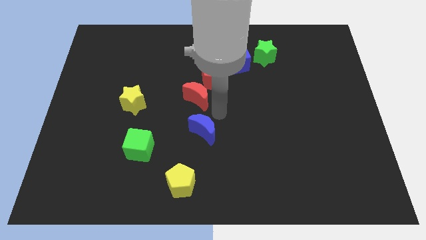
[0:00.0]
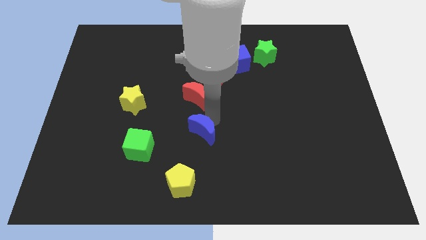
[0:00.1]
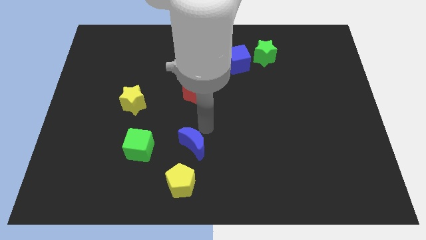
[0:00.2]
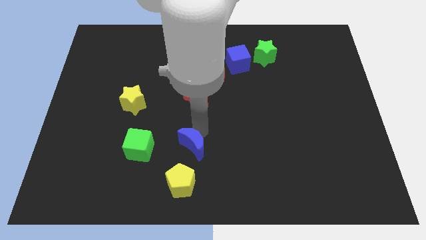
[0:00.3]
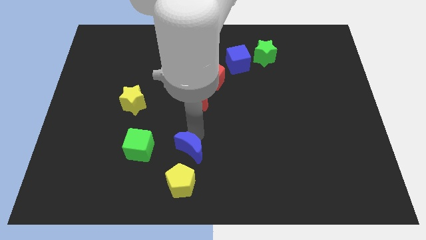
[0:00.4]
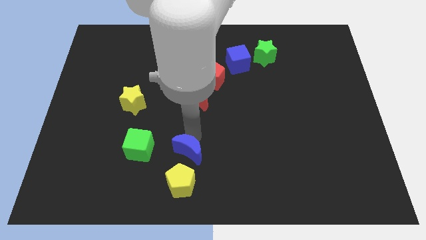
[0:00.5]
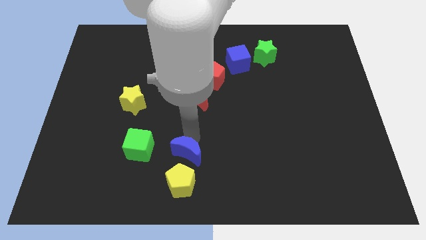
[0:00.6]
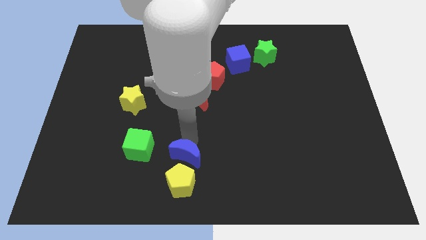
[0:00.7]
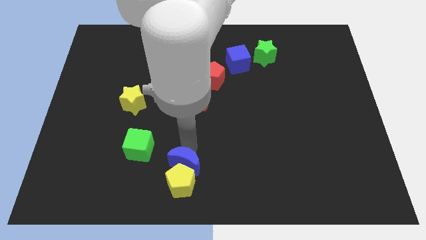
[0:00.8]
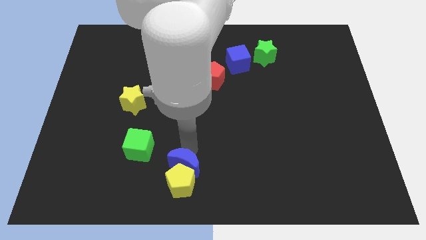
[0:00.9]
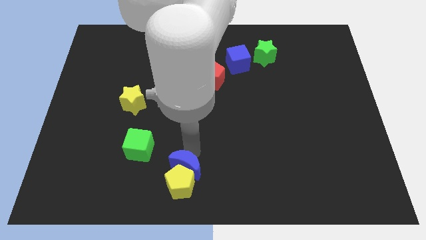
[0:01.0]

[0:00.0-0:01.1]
push the blue crescent into the yellow pentagon

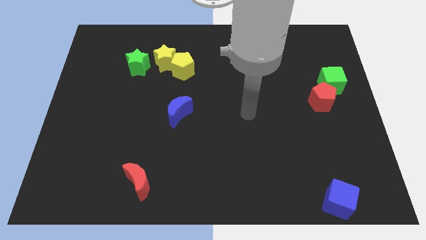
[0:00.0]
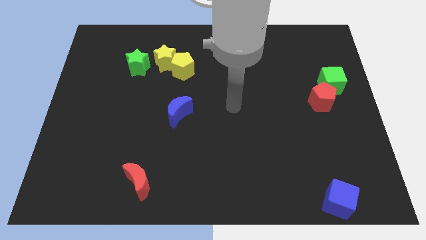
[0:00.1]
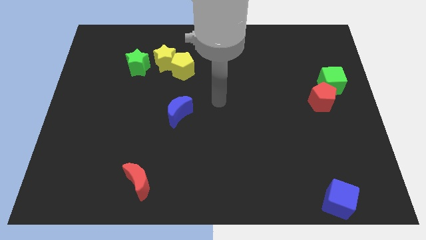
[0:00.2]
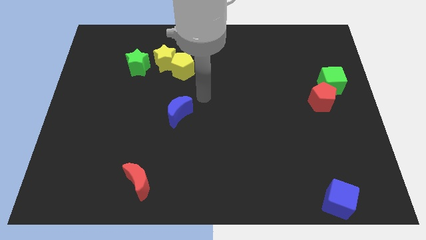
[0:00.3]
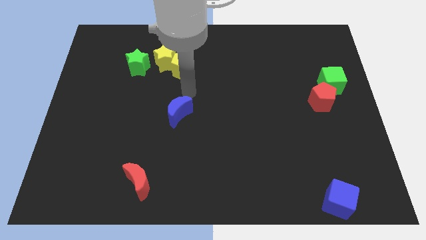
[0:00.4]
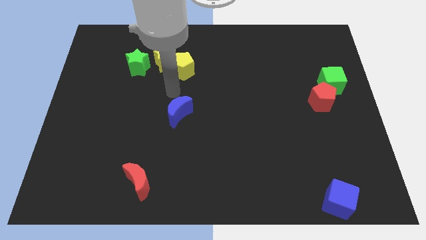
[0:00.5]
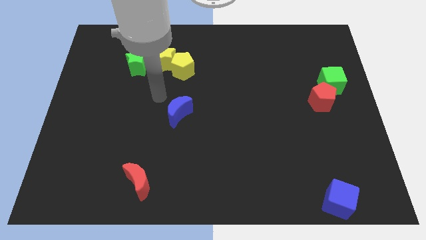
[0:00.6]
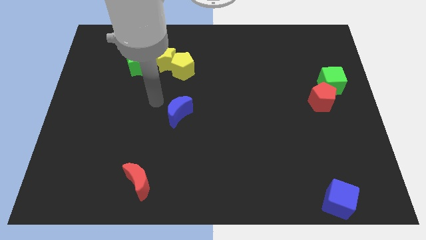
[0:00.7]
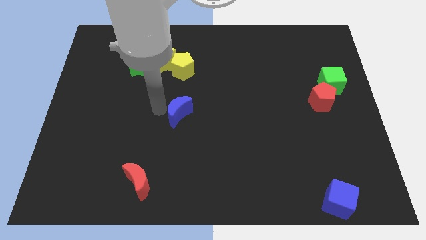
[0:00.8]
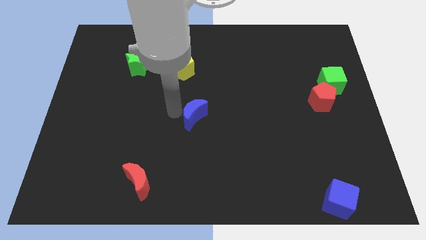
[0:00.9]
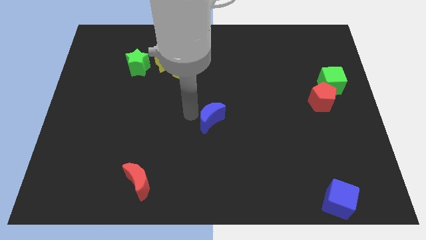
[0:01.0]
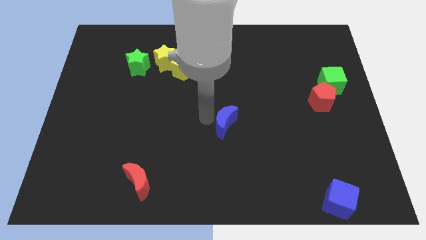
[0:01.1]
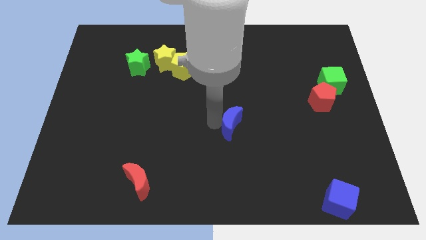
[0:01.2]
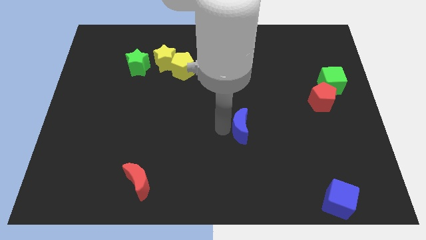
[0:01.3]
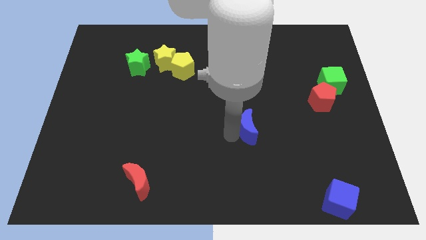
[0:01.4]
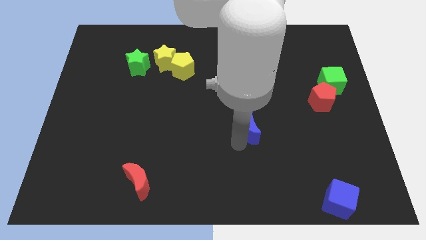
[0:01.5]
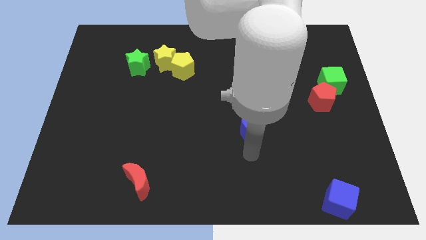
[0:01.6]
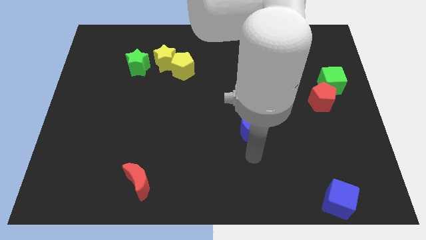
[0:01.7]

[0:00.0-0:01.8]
move the blue moon to the center of the board

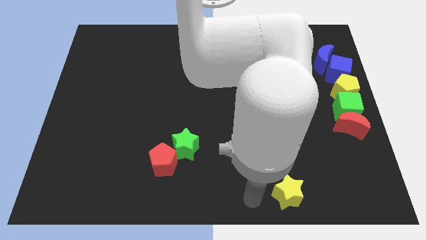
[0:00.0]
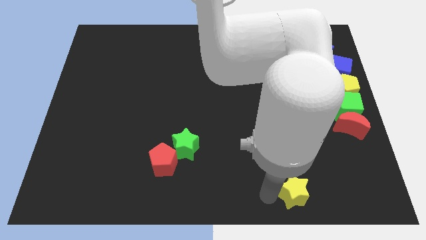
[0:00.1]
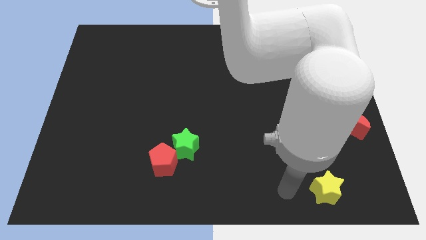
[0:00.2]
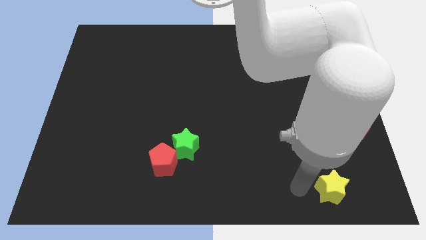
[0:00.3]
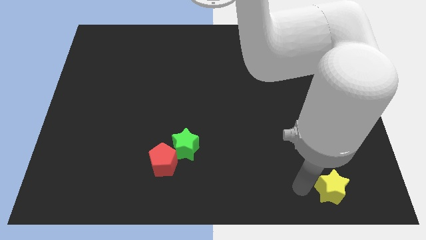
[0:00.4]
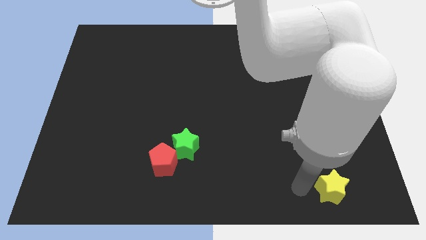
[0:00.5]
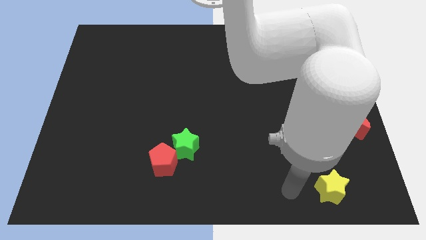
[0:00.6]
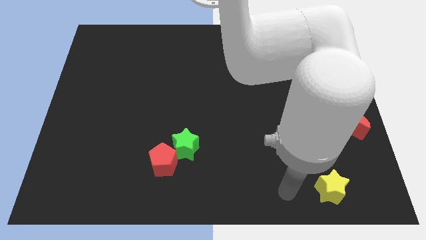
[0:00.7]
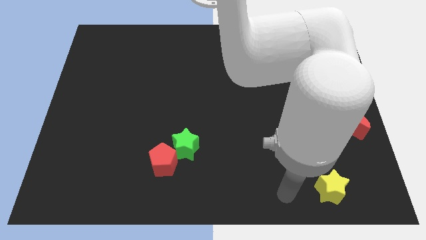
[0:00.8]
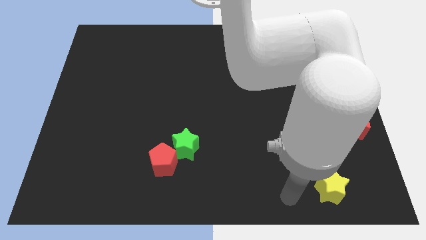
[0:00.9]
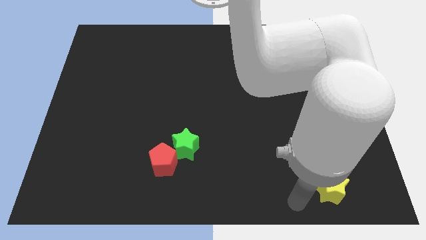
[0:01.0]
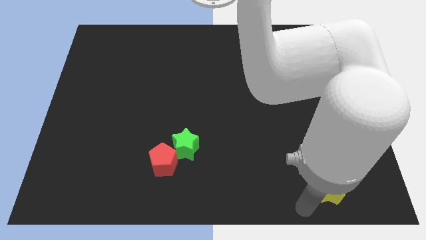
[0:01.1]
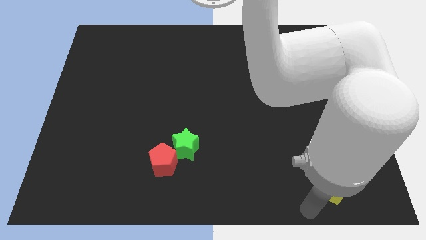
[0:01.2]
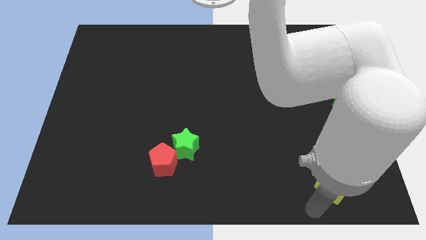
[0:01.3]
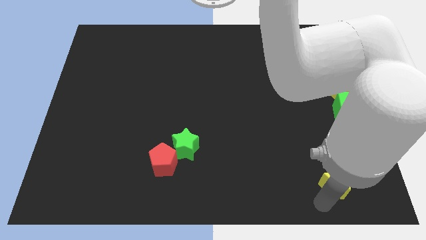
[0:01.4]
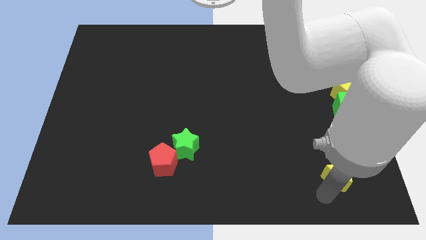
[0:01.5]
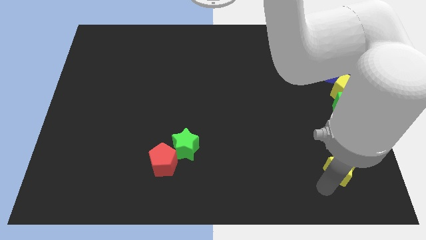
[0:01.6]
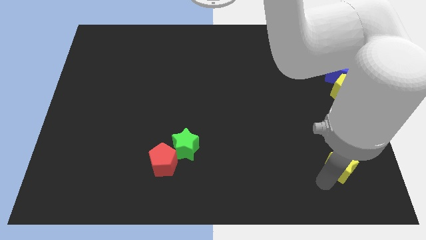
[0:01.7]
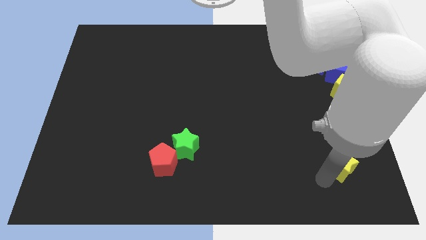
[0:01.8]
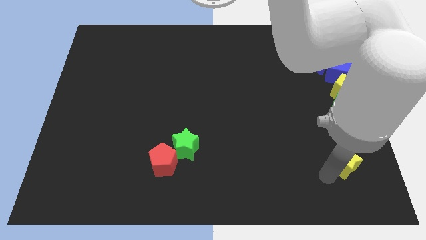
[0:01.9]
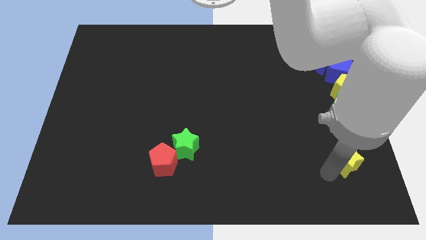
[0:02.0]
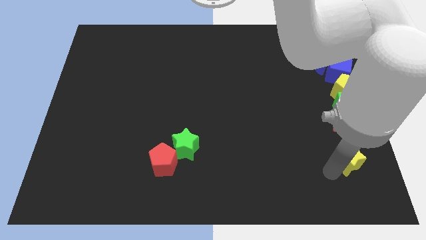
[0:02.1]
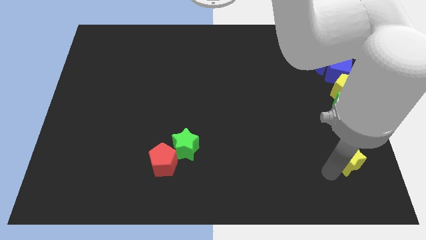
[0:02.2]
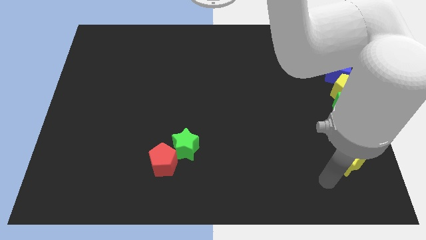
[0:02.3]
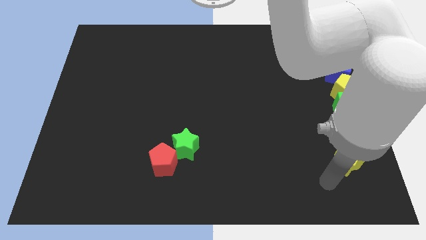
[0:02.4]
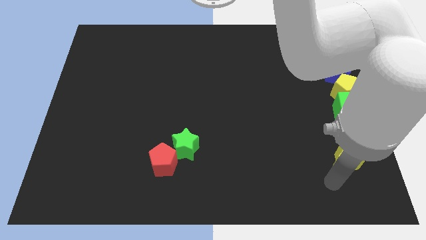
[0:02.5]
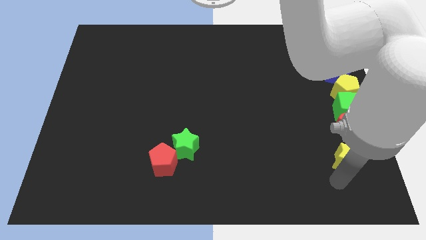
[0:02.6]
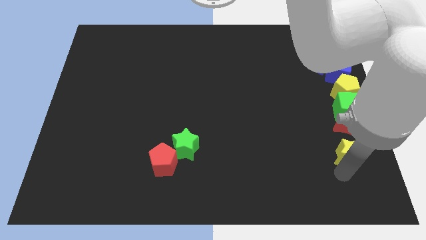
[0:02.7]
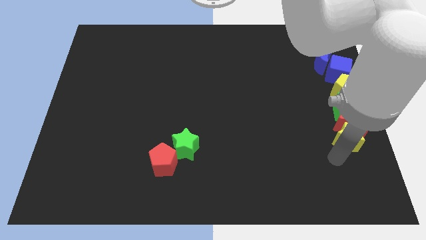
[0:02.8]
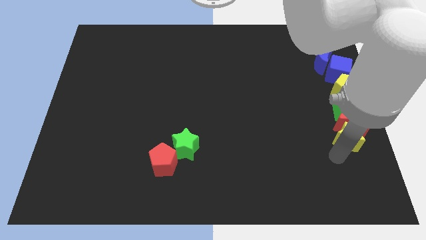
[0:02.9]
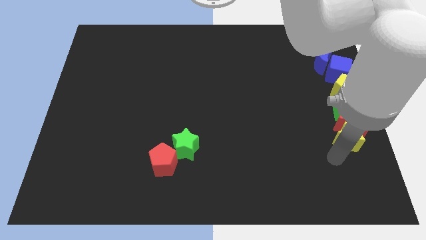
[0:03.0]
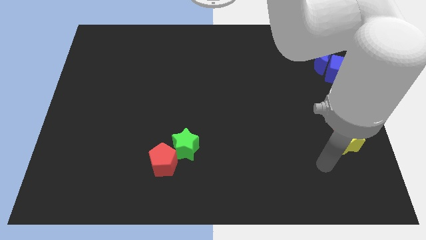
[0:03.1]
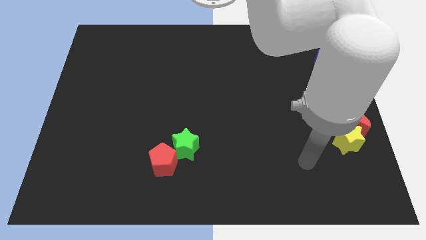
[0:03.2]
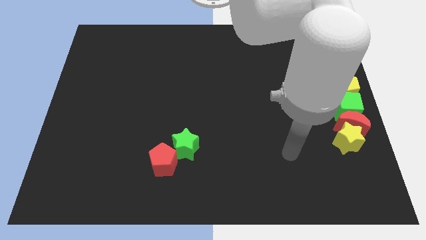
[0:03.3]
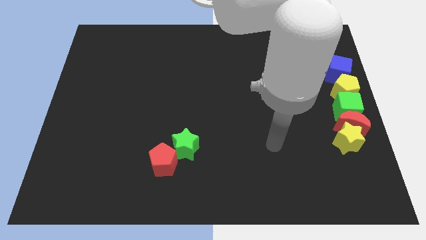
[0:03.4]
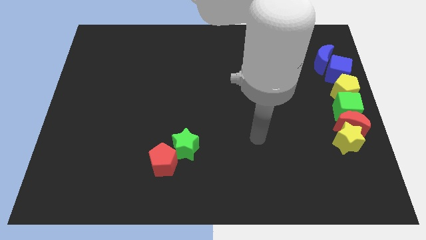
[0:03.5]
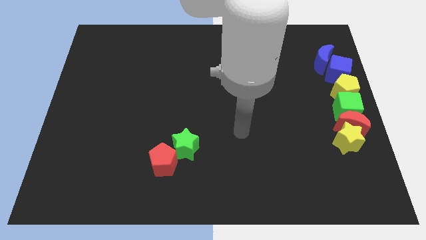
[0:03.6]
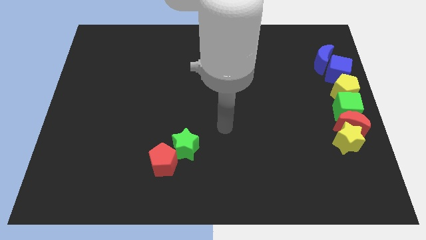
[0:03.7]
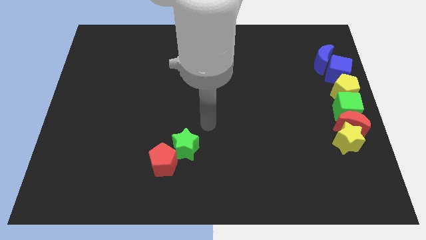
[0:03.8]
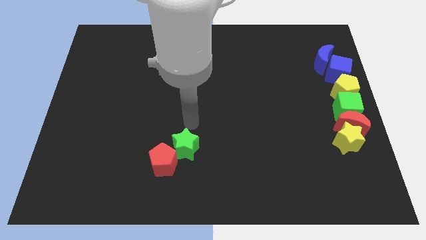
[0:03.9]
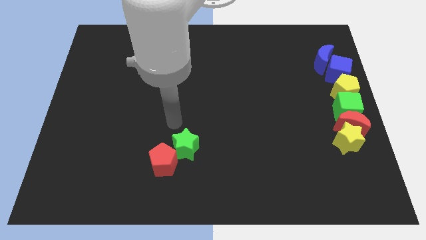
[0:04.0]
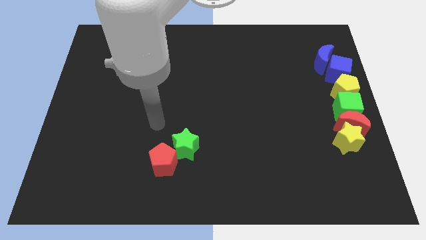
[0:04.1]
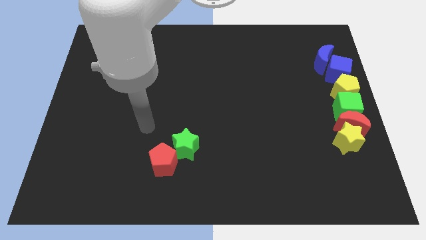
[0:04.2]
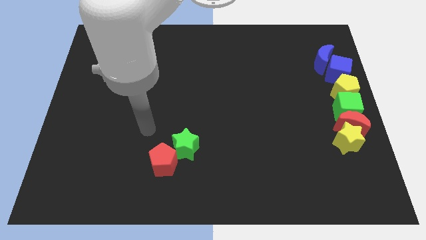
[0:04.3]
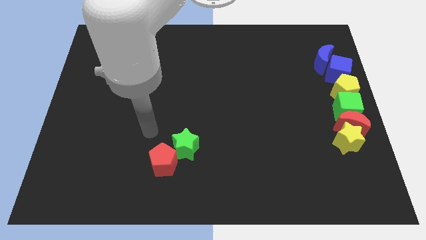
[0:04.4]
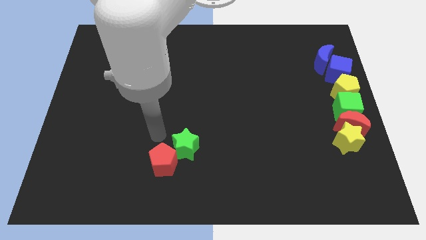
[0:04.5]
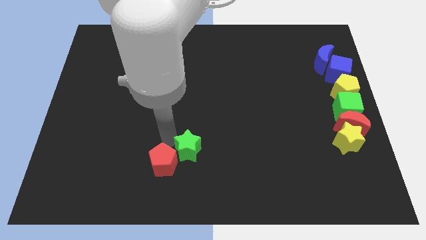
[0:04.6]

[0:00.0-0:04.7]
place the yellow star near the red crescent

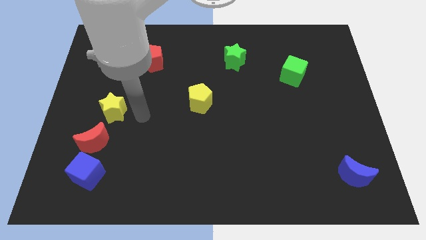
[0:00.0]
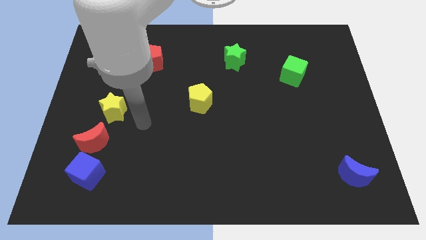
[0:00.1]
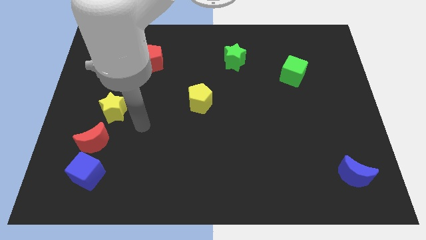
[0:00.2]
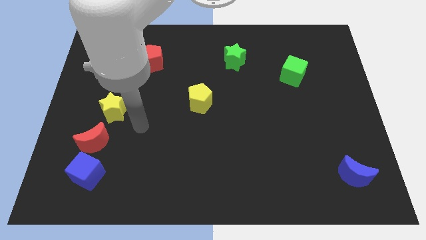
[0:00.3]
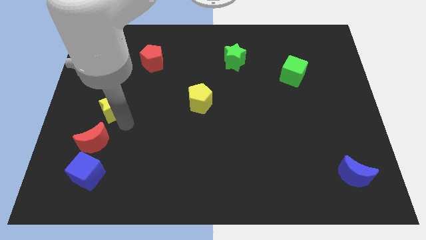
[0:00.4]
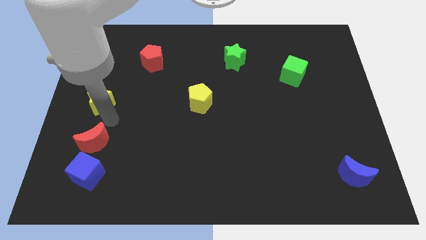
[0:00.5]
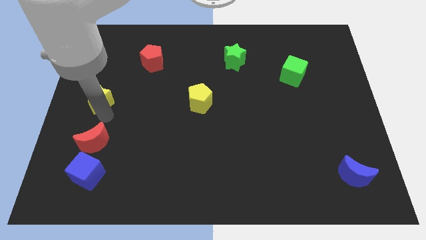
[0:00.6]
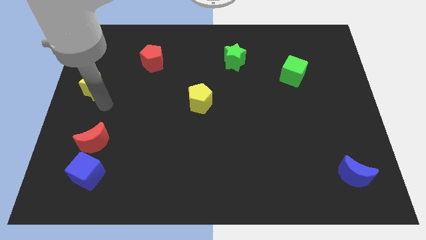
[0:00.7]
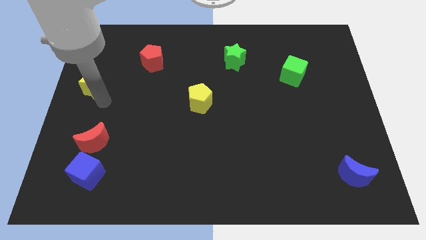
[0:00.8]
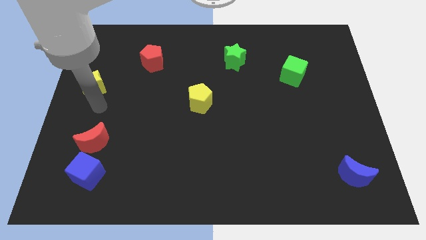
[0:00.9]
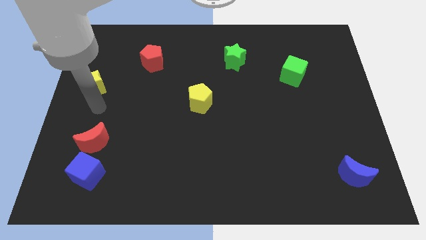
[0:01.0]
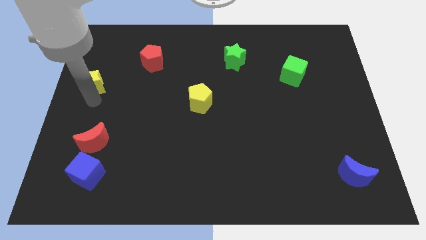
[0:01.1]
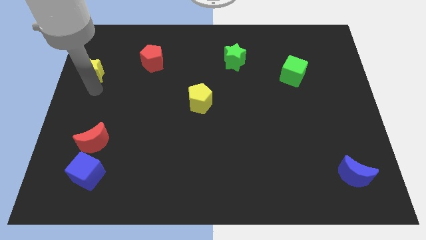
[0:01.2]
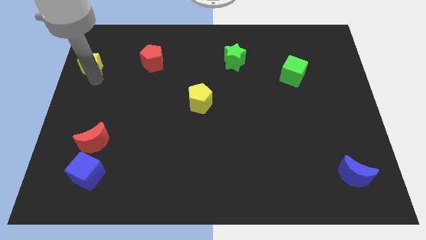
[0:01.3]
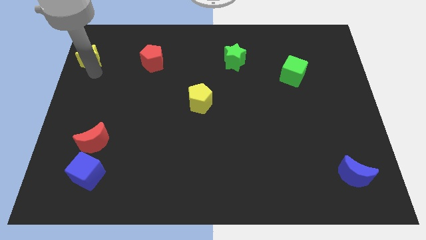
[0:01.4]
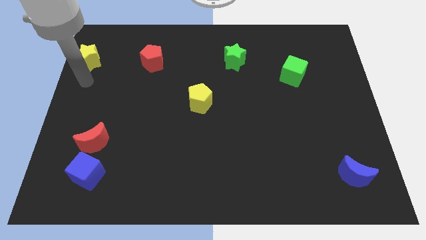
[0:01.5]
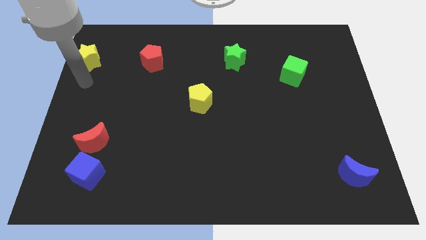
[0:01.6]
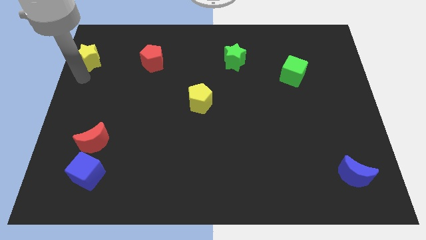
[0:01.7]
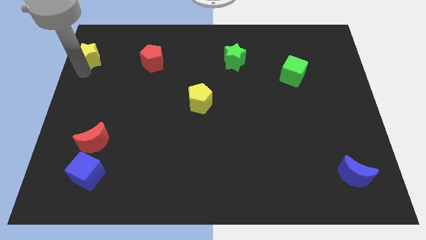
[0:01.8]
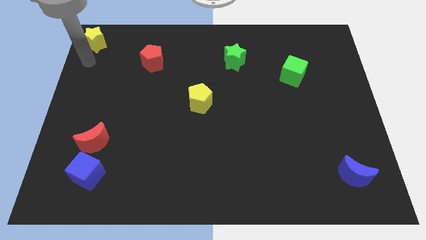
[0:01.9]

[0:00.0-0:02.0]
move yellow star to the left top corner of the board
